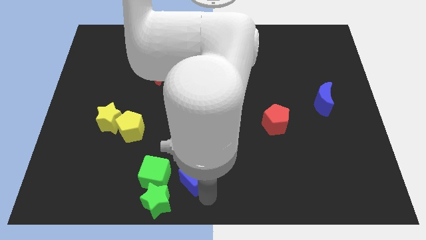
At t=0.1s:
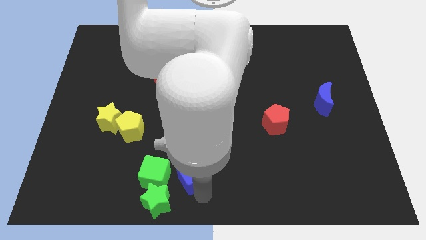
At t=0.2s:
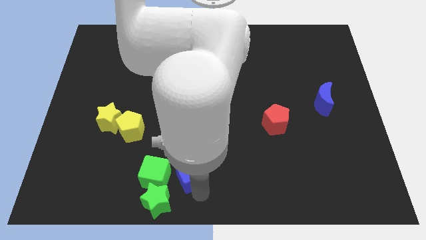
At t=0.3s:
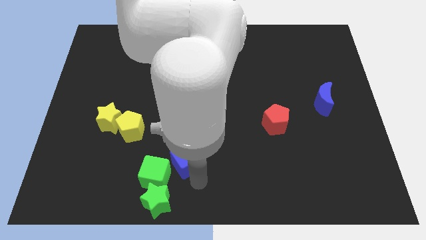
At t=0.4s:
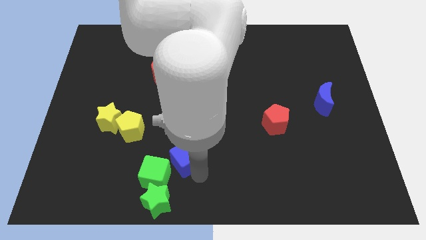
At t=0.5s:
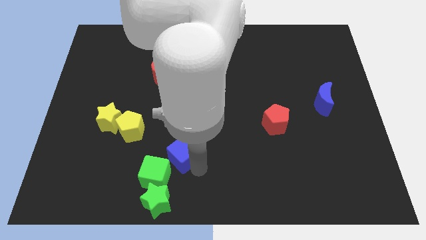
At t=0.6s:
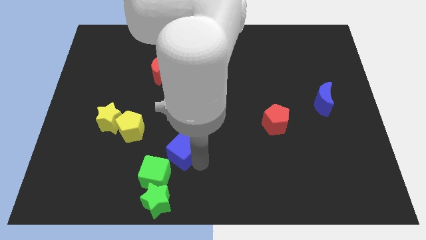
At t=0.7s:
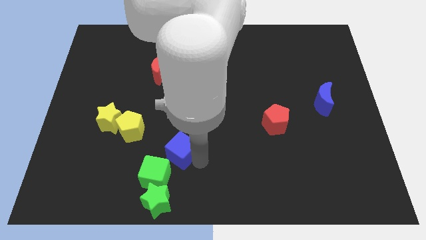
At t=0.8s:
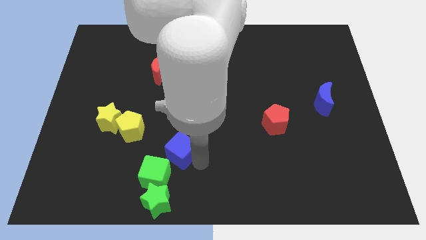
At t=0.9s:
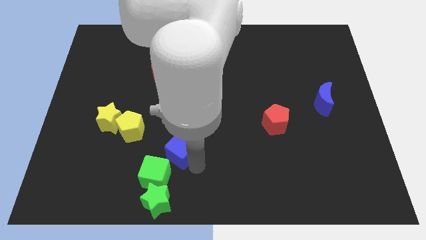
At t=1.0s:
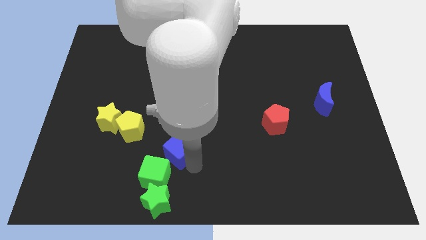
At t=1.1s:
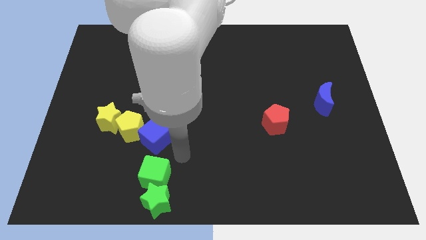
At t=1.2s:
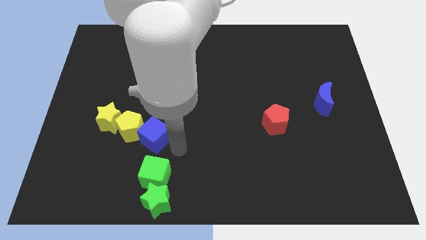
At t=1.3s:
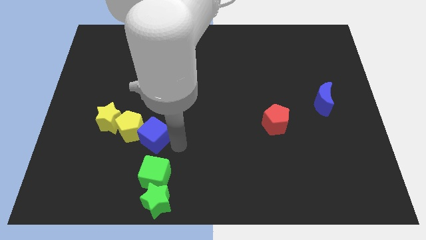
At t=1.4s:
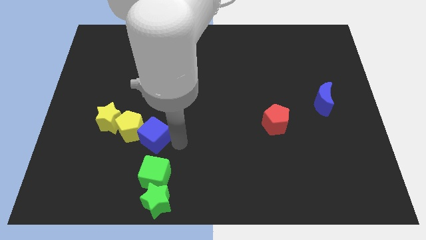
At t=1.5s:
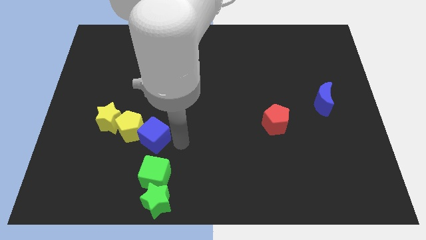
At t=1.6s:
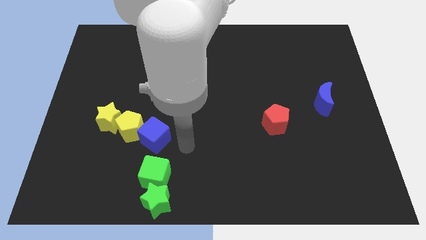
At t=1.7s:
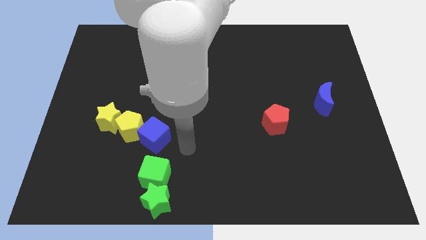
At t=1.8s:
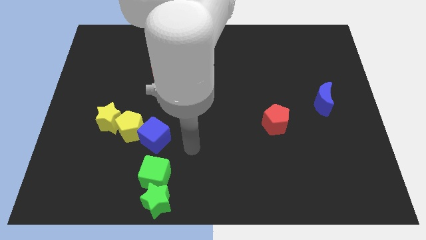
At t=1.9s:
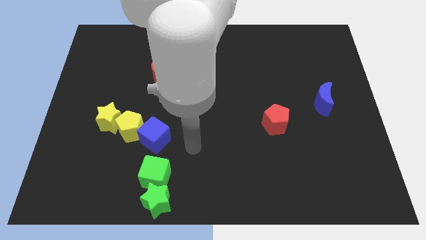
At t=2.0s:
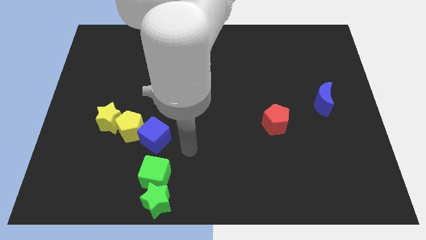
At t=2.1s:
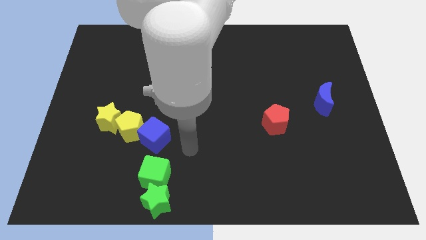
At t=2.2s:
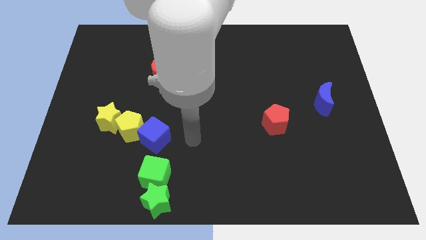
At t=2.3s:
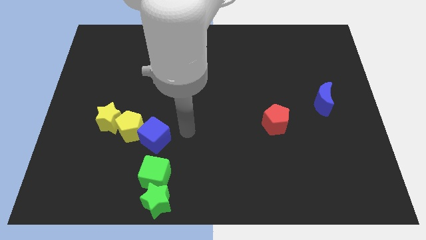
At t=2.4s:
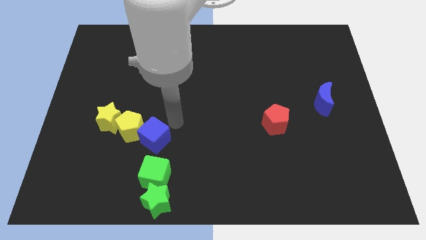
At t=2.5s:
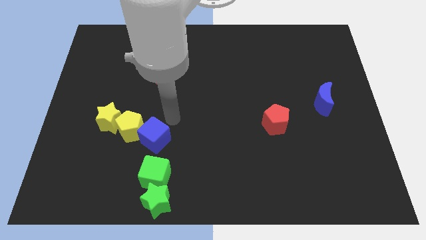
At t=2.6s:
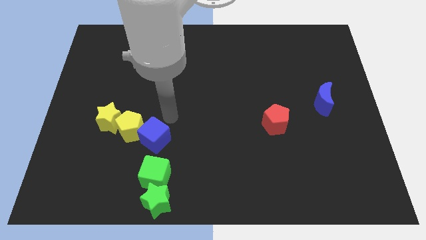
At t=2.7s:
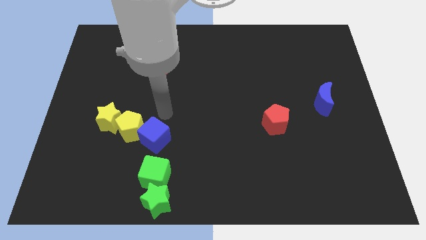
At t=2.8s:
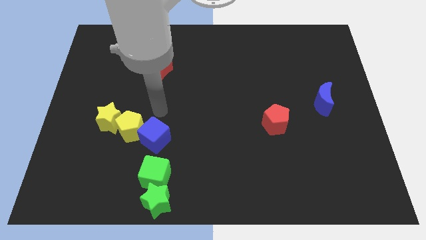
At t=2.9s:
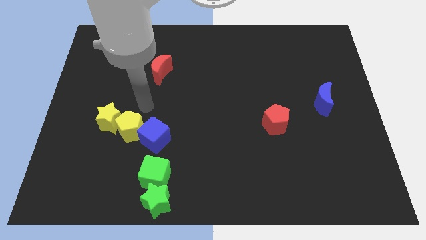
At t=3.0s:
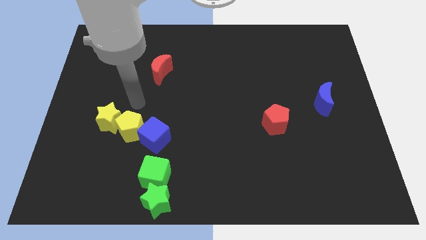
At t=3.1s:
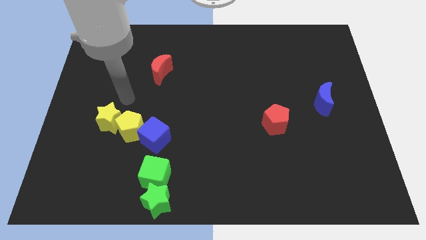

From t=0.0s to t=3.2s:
push the blue cube close to yellow pentagon

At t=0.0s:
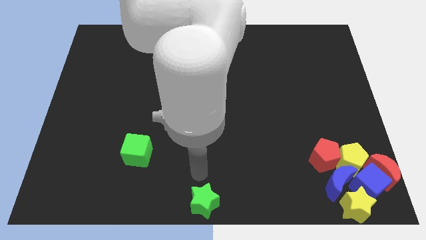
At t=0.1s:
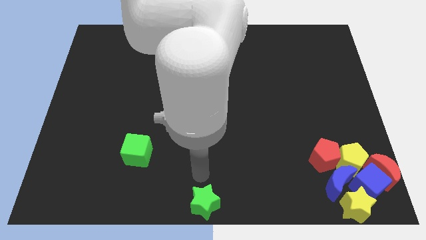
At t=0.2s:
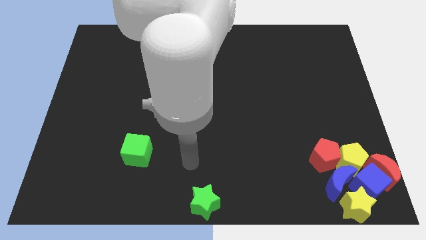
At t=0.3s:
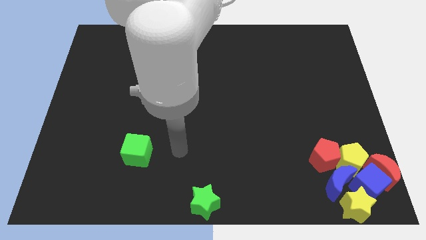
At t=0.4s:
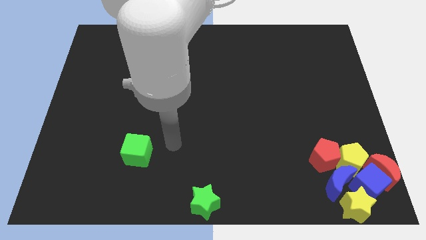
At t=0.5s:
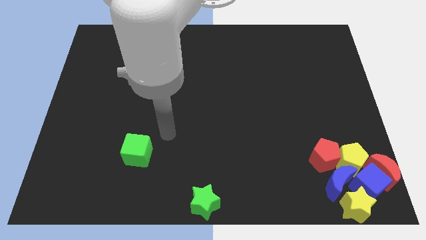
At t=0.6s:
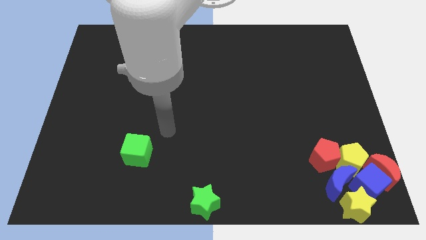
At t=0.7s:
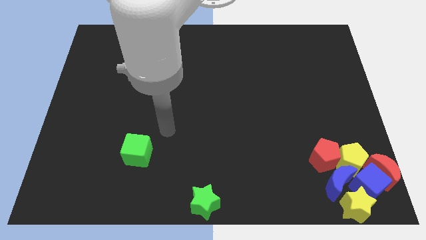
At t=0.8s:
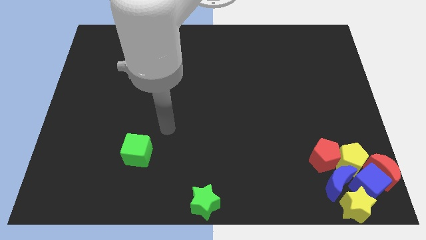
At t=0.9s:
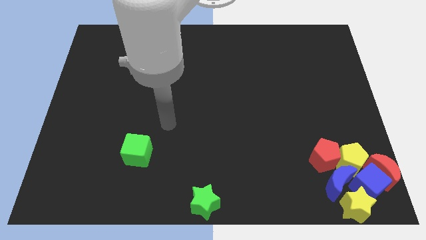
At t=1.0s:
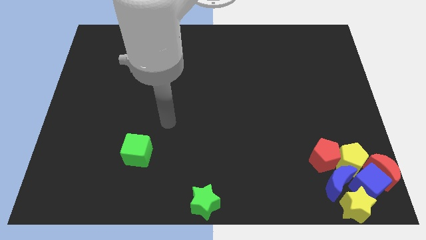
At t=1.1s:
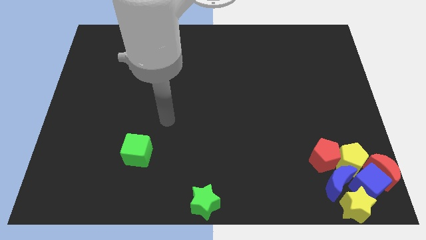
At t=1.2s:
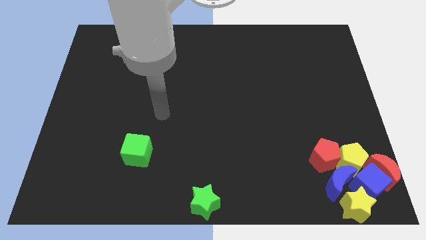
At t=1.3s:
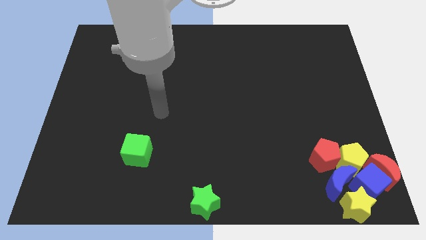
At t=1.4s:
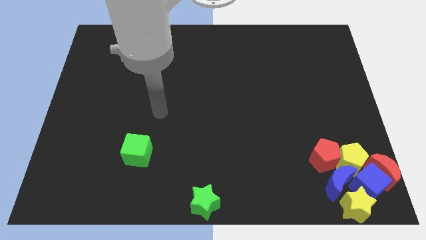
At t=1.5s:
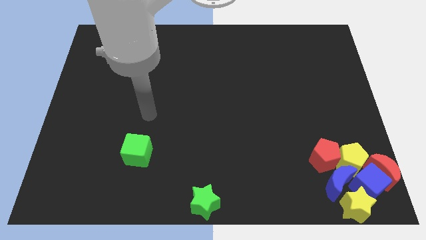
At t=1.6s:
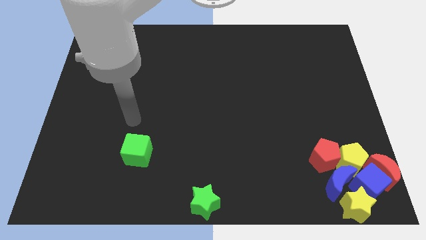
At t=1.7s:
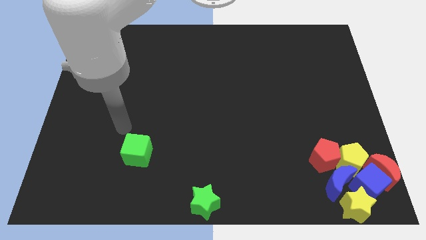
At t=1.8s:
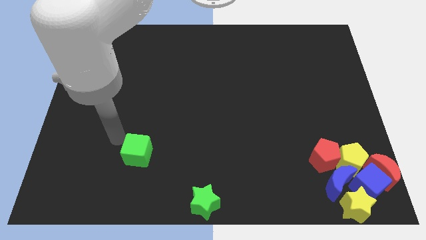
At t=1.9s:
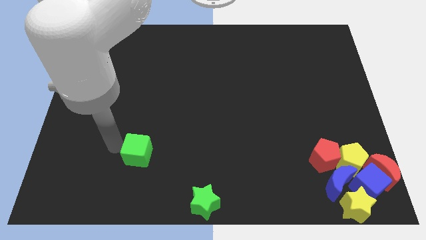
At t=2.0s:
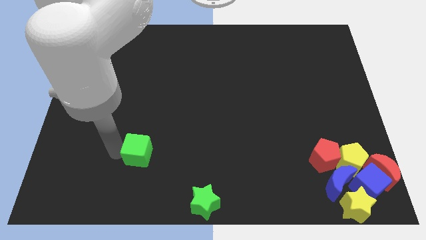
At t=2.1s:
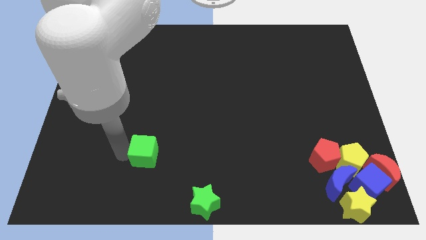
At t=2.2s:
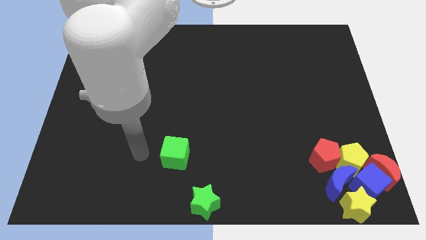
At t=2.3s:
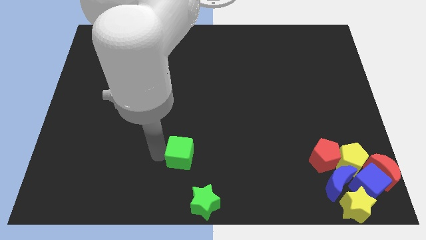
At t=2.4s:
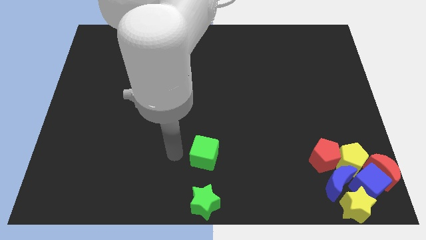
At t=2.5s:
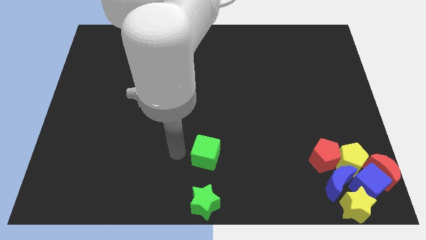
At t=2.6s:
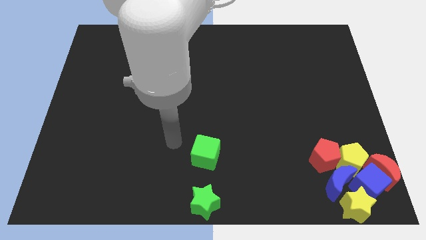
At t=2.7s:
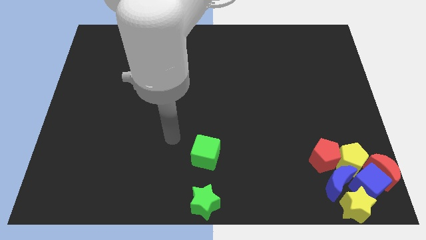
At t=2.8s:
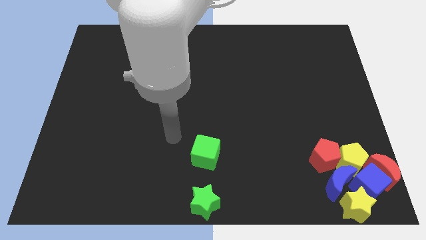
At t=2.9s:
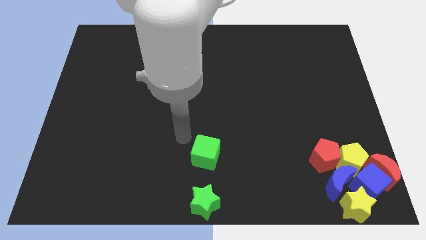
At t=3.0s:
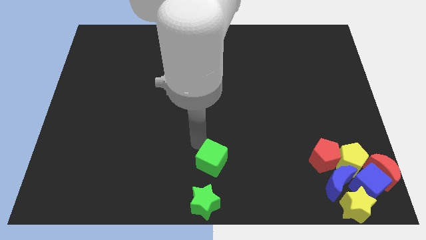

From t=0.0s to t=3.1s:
push the green cube towards the top of the green star

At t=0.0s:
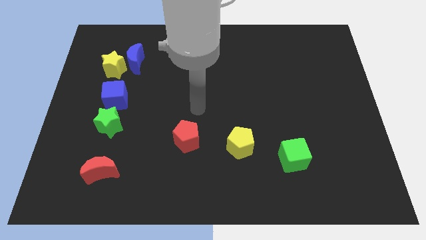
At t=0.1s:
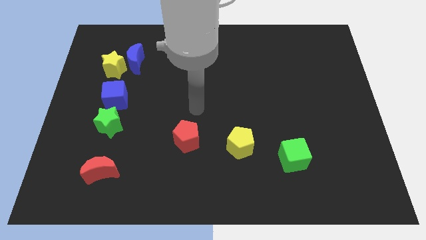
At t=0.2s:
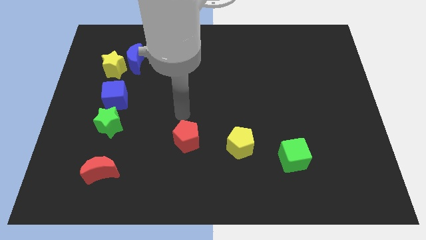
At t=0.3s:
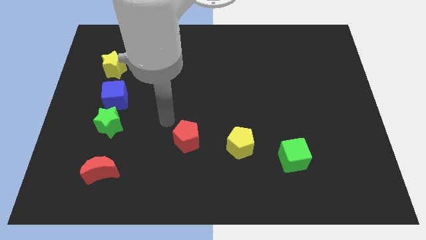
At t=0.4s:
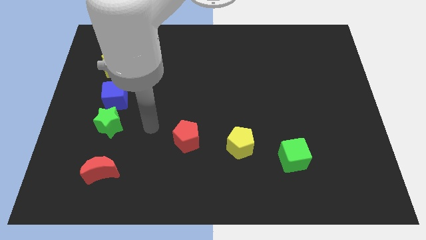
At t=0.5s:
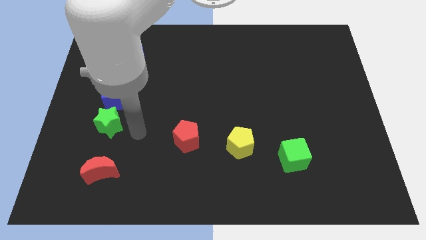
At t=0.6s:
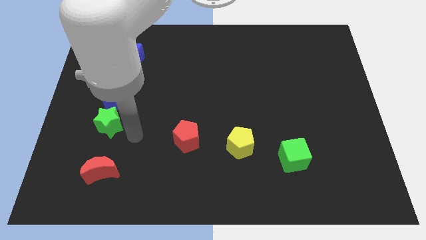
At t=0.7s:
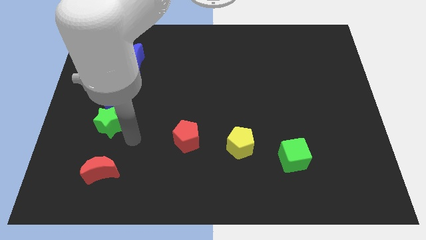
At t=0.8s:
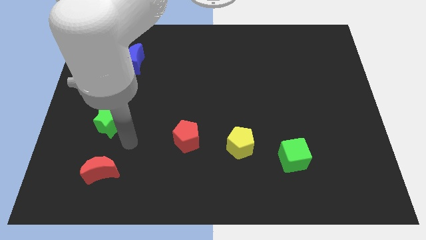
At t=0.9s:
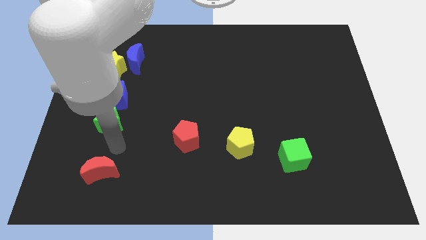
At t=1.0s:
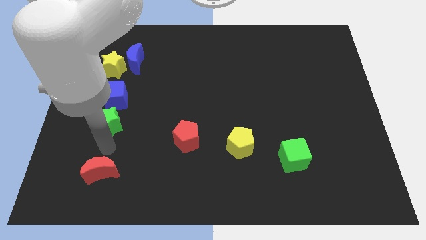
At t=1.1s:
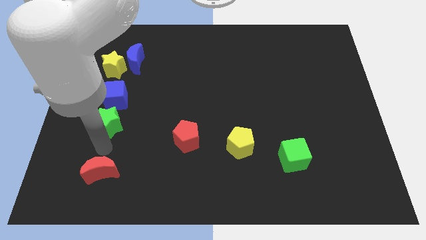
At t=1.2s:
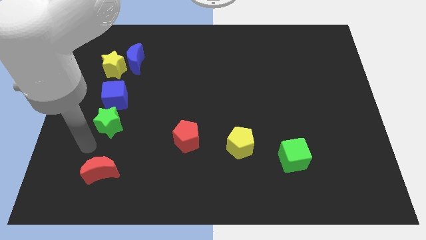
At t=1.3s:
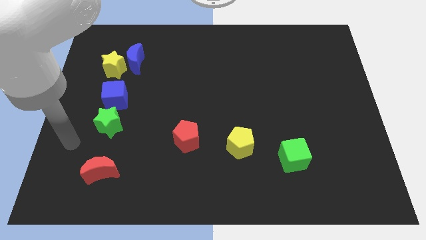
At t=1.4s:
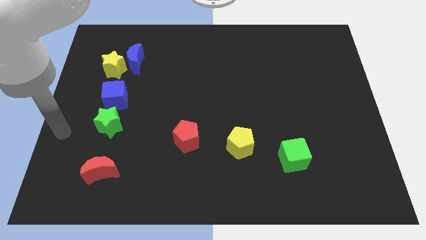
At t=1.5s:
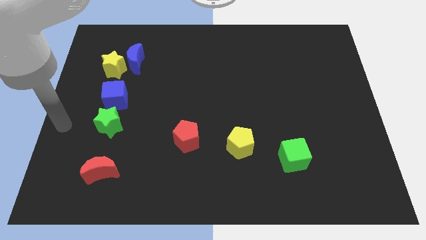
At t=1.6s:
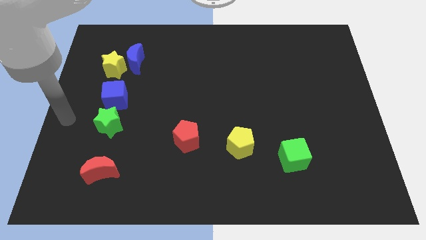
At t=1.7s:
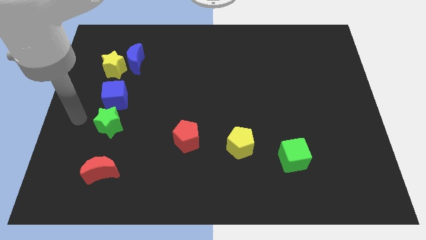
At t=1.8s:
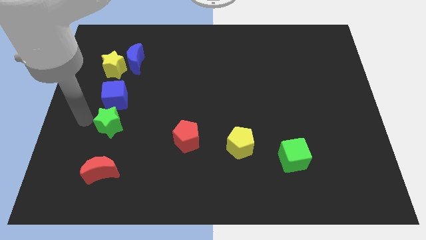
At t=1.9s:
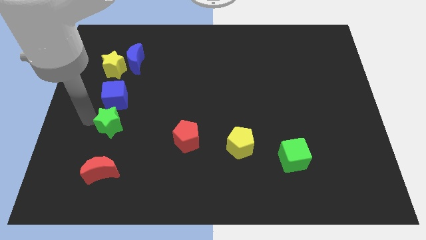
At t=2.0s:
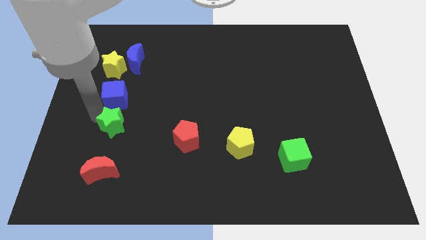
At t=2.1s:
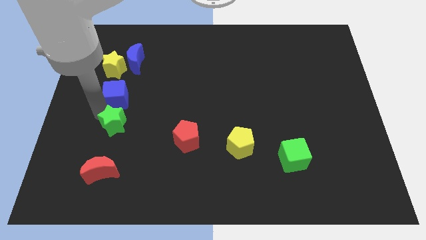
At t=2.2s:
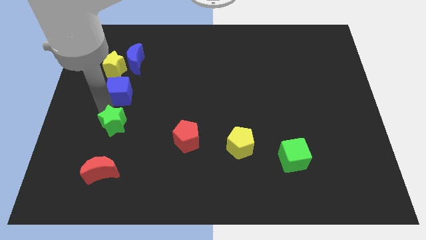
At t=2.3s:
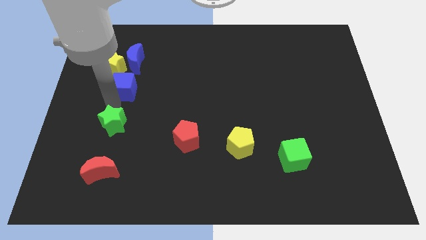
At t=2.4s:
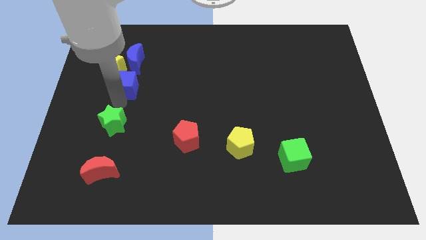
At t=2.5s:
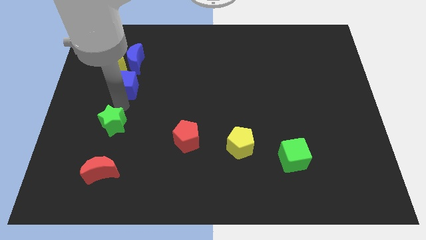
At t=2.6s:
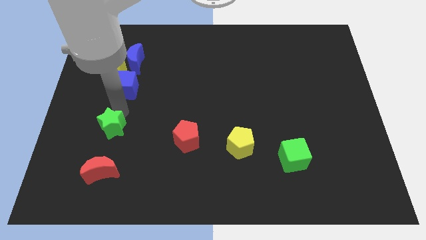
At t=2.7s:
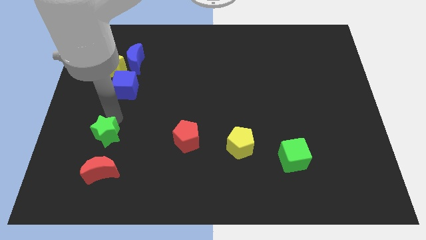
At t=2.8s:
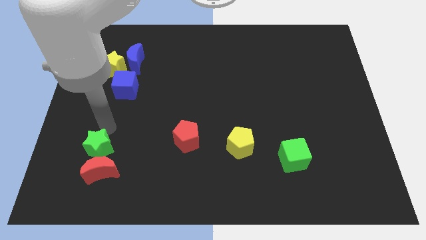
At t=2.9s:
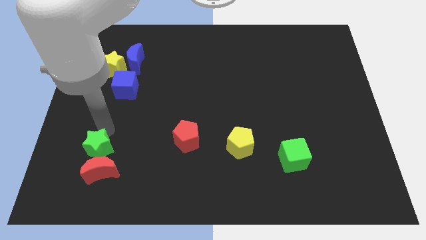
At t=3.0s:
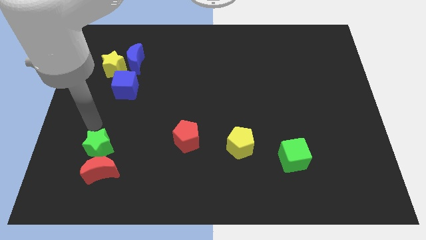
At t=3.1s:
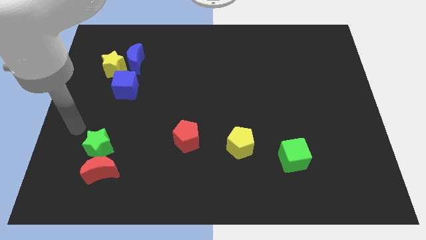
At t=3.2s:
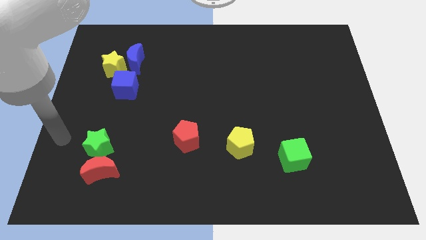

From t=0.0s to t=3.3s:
push the green star into the red crescent
